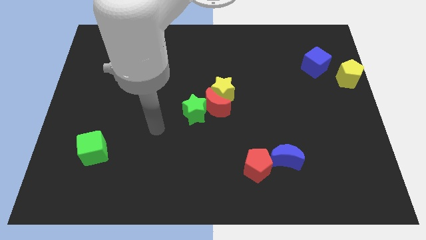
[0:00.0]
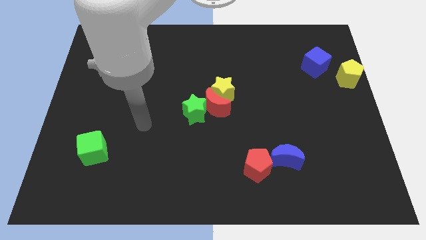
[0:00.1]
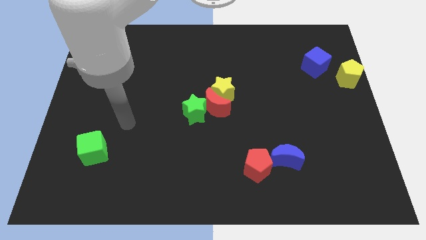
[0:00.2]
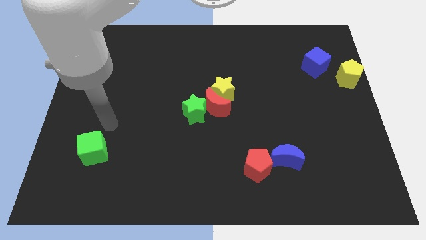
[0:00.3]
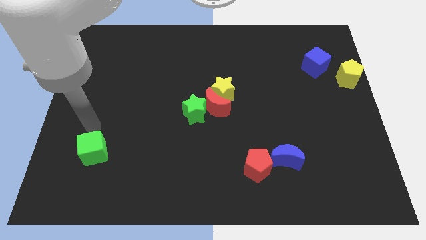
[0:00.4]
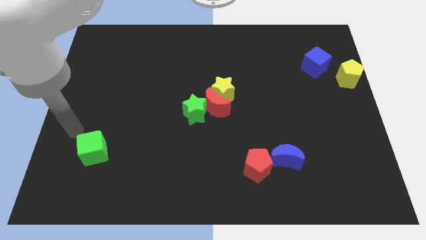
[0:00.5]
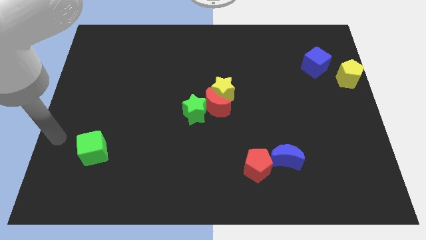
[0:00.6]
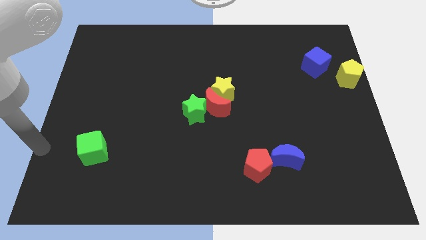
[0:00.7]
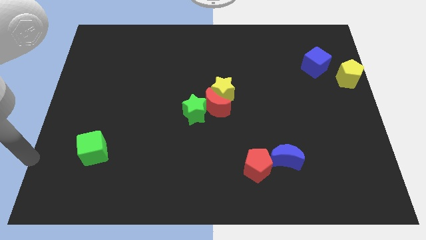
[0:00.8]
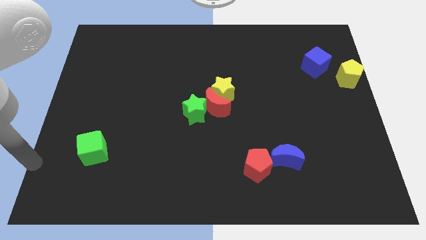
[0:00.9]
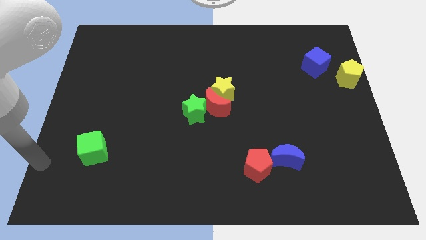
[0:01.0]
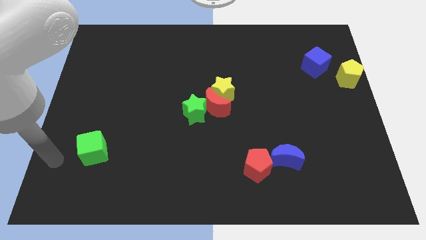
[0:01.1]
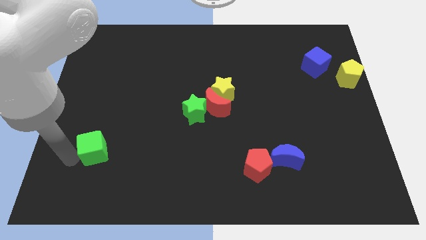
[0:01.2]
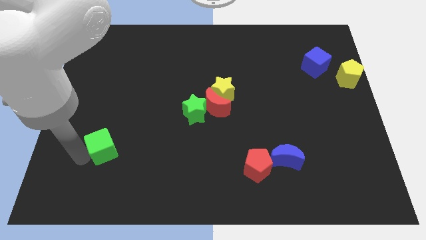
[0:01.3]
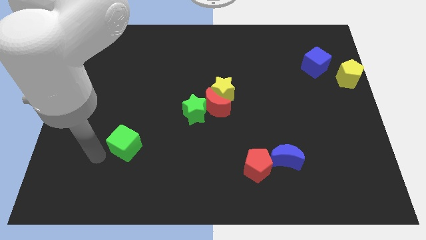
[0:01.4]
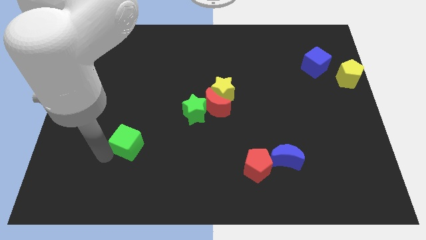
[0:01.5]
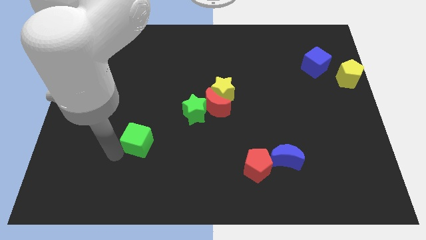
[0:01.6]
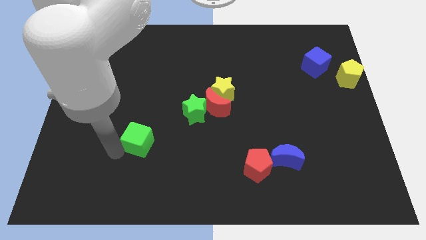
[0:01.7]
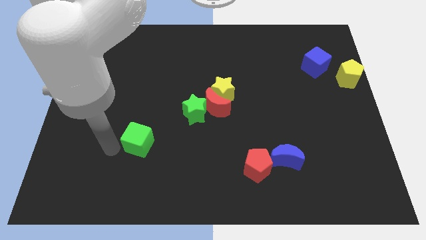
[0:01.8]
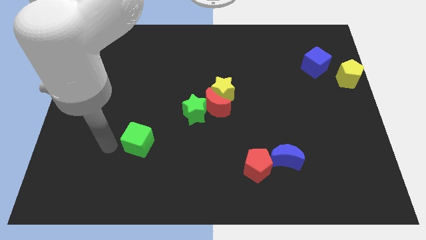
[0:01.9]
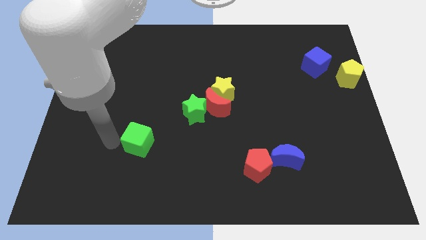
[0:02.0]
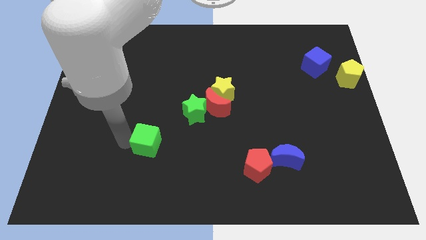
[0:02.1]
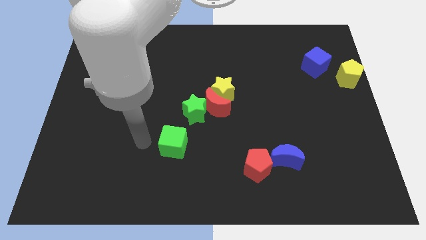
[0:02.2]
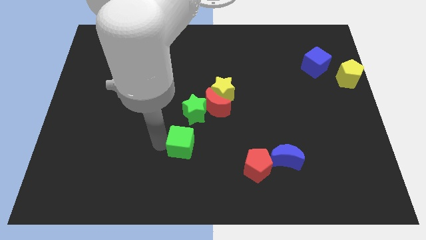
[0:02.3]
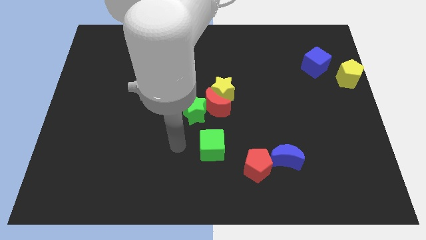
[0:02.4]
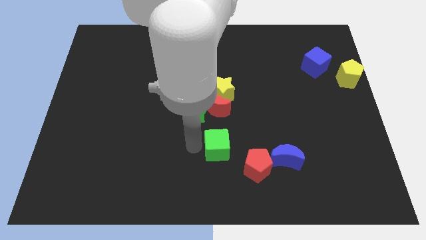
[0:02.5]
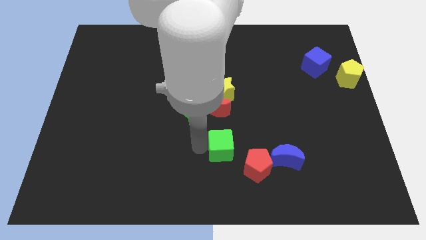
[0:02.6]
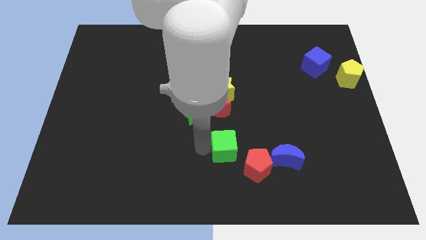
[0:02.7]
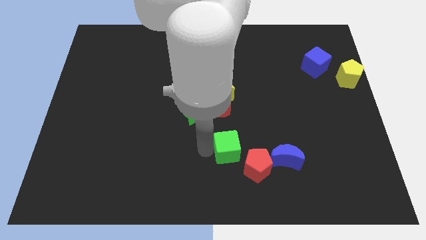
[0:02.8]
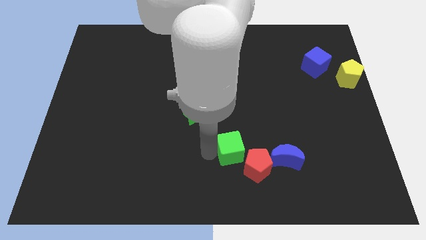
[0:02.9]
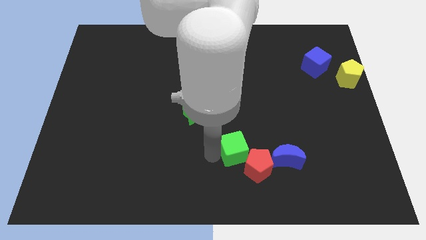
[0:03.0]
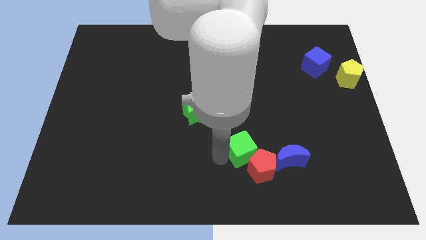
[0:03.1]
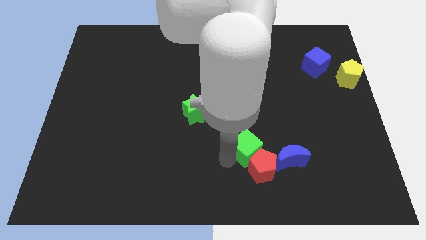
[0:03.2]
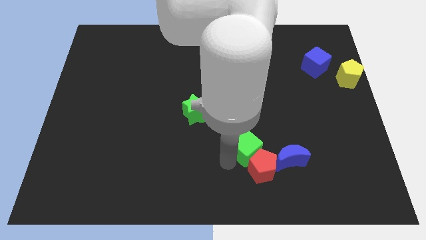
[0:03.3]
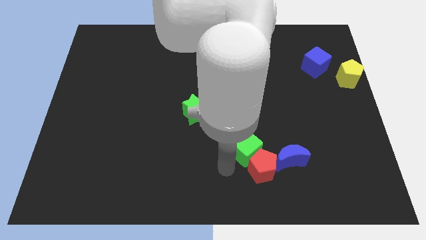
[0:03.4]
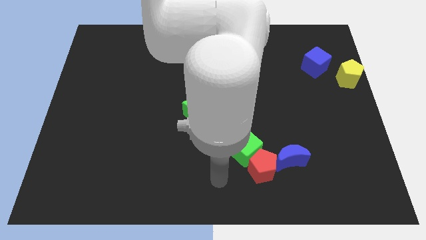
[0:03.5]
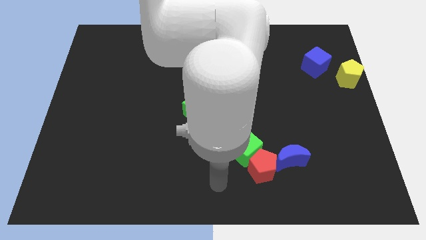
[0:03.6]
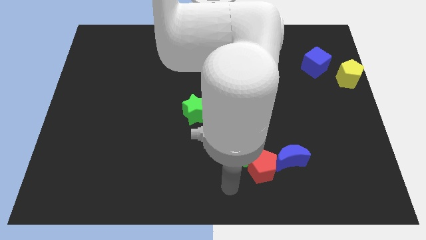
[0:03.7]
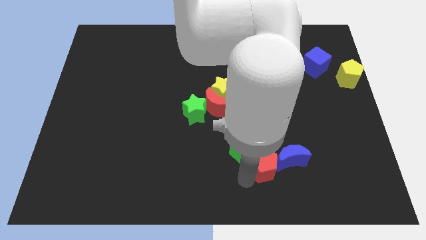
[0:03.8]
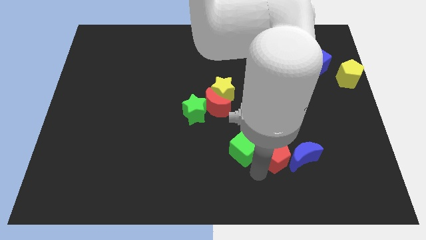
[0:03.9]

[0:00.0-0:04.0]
push green cube in to red pentagon

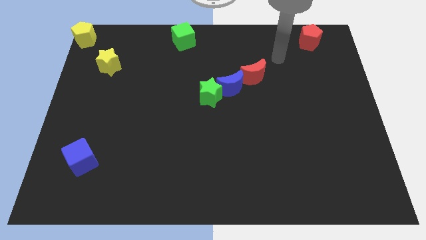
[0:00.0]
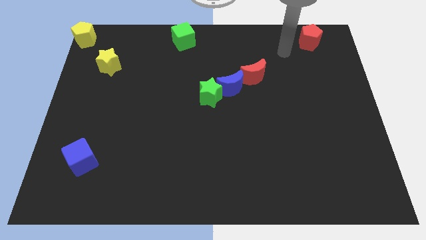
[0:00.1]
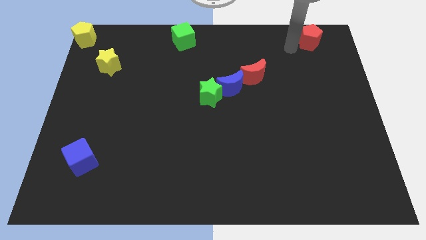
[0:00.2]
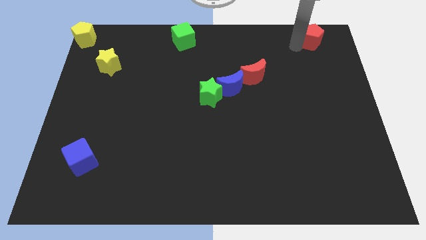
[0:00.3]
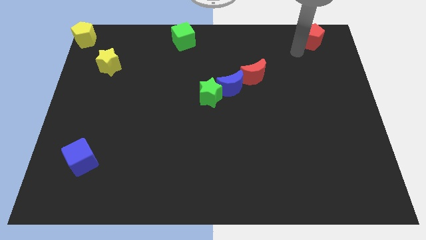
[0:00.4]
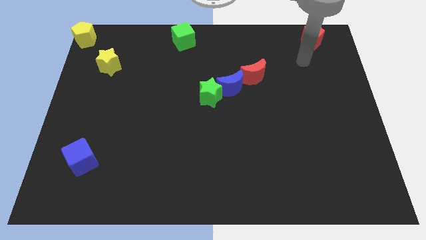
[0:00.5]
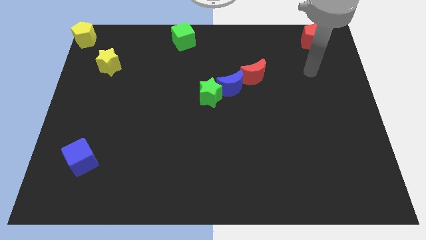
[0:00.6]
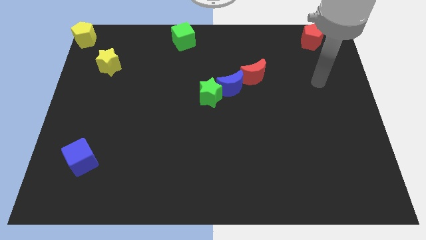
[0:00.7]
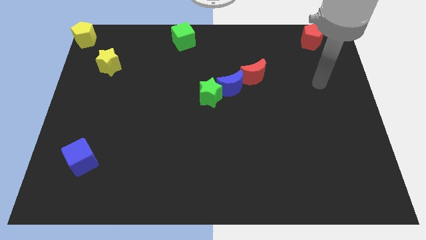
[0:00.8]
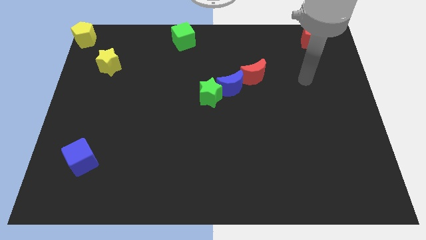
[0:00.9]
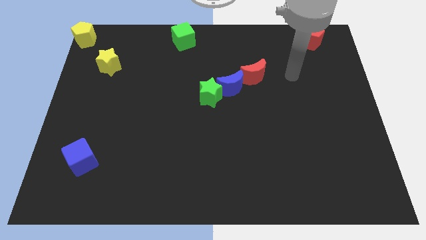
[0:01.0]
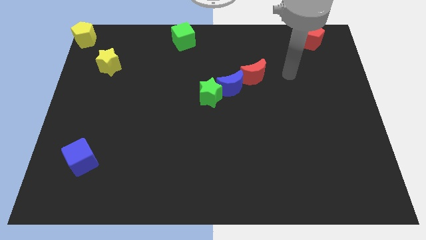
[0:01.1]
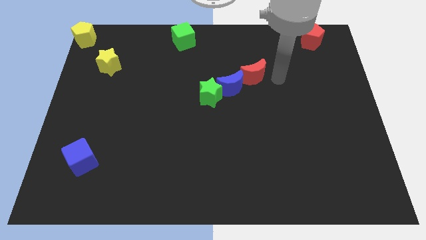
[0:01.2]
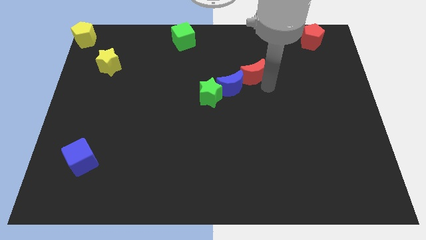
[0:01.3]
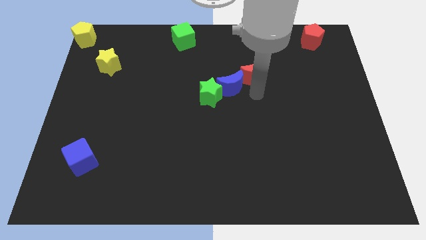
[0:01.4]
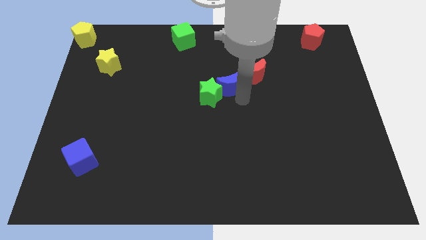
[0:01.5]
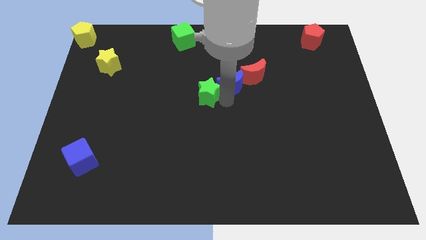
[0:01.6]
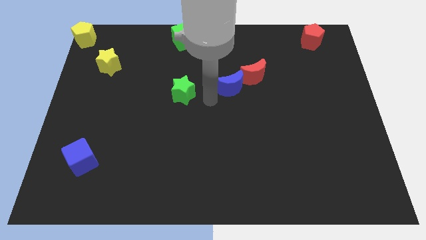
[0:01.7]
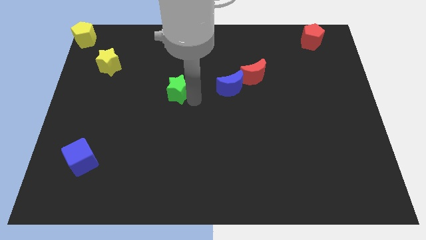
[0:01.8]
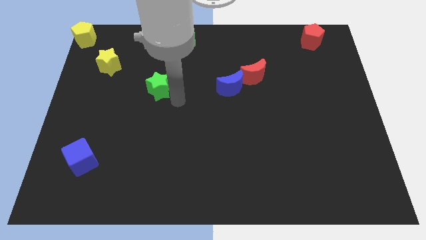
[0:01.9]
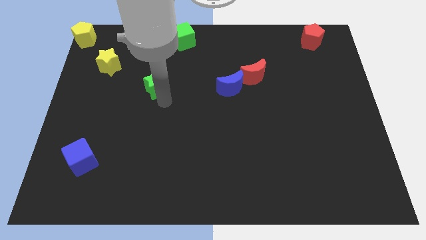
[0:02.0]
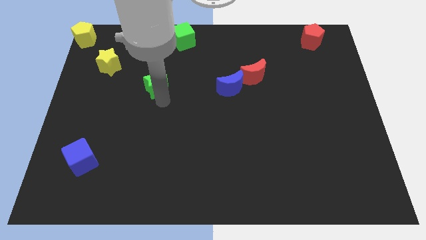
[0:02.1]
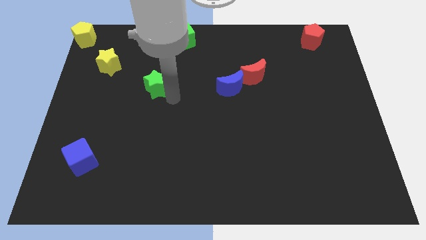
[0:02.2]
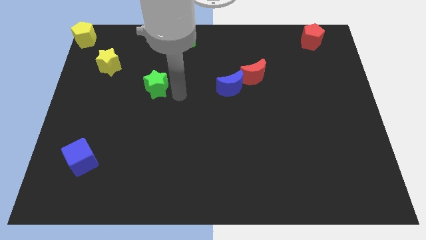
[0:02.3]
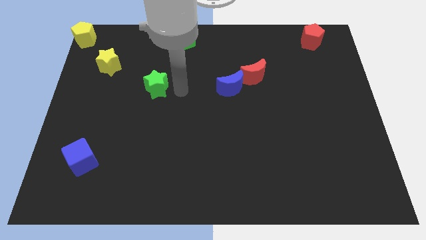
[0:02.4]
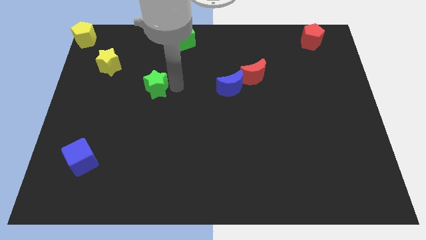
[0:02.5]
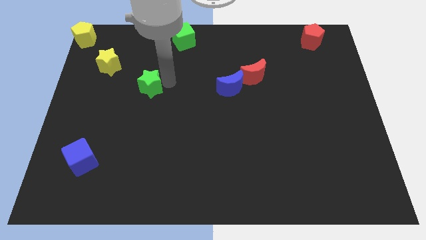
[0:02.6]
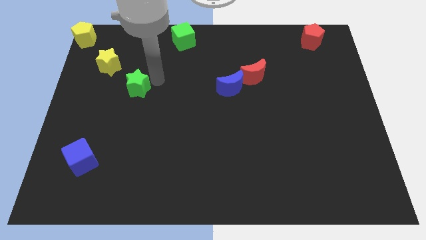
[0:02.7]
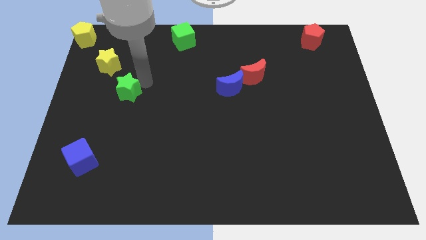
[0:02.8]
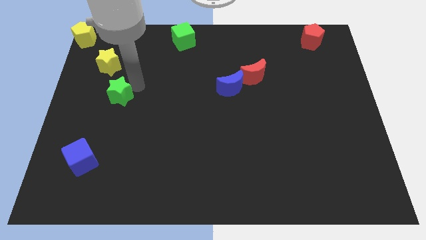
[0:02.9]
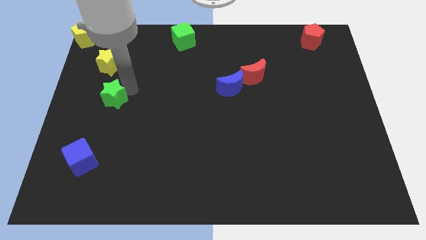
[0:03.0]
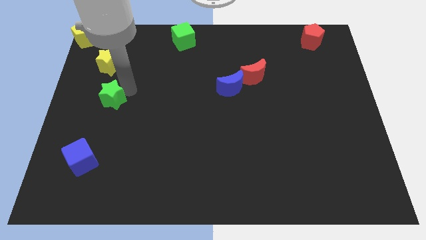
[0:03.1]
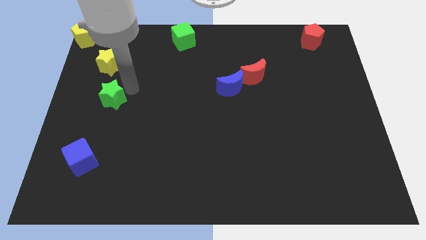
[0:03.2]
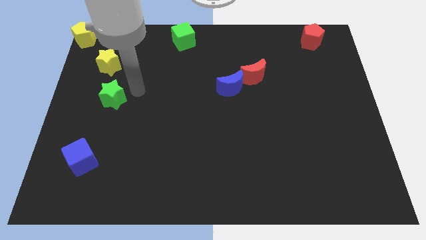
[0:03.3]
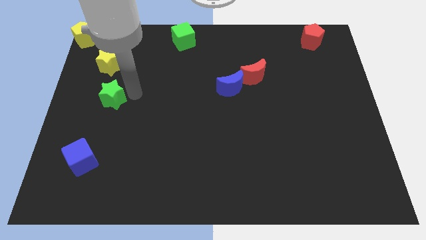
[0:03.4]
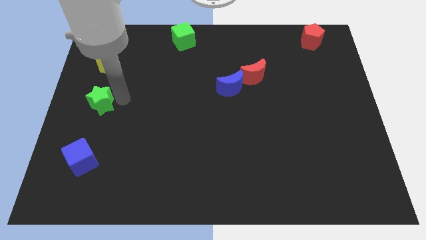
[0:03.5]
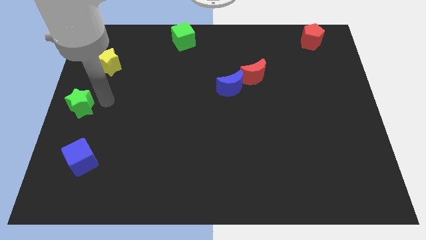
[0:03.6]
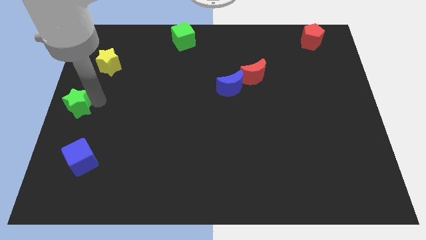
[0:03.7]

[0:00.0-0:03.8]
push the green star towards the left center of the board

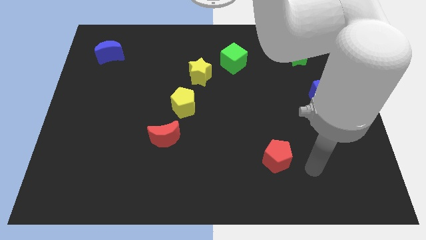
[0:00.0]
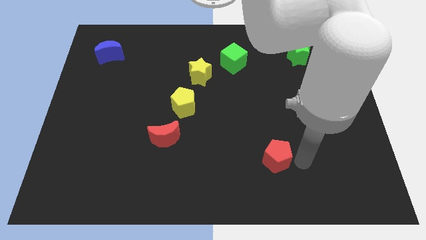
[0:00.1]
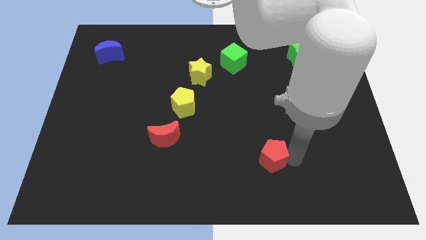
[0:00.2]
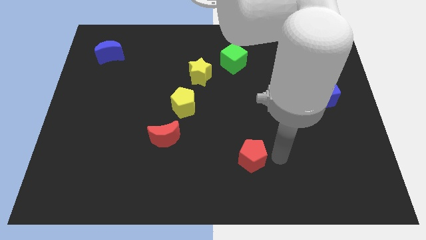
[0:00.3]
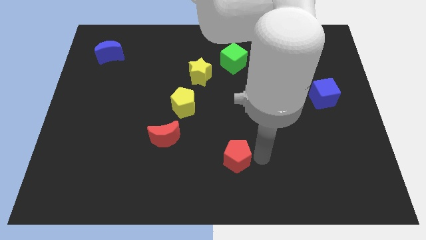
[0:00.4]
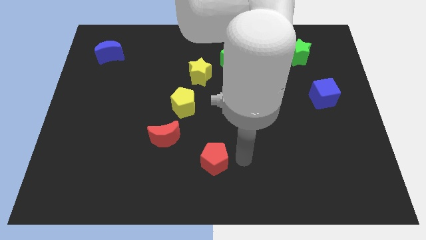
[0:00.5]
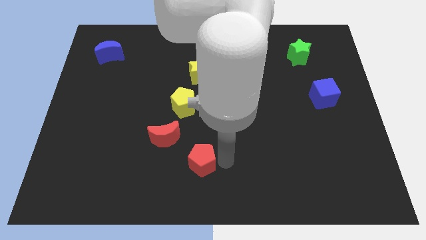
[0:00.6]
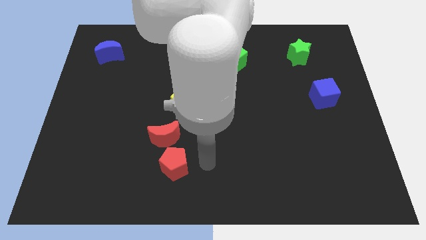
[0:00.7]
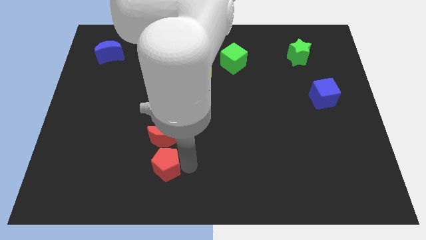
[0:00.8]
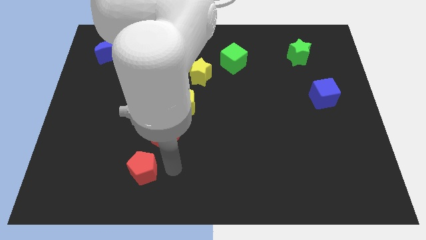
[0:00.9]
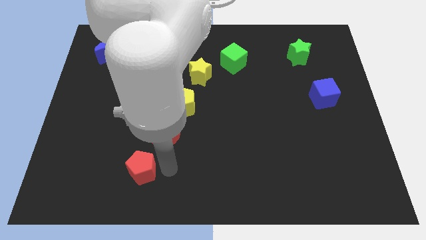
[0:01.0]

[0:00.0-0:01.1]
move red pentagon to the bottom left of red moon
